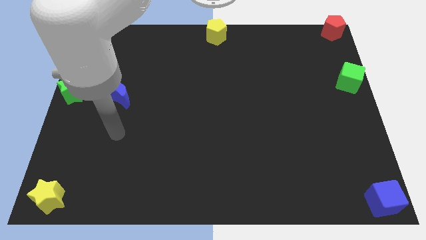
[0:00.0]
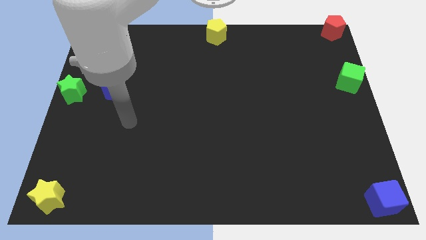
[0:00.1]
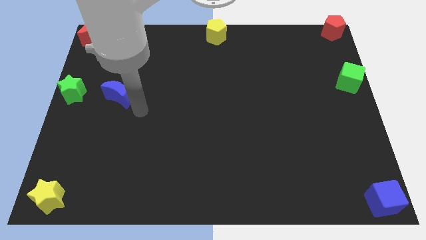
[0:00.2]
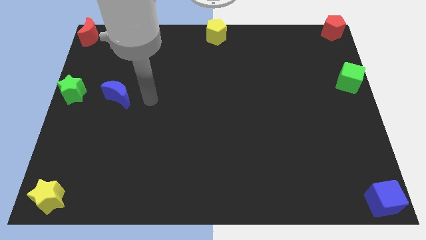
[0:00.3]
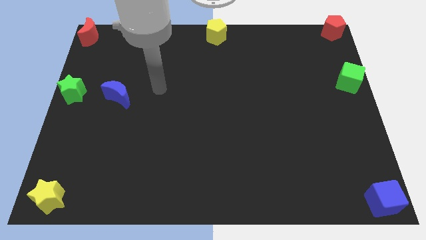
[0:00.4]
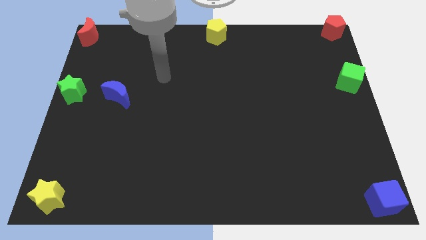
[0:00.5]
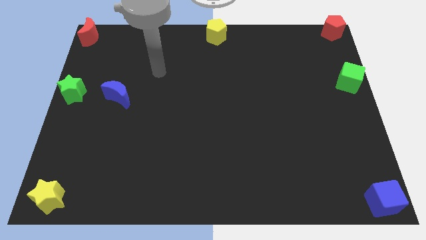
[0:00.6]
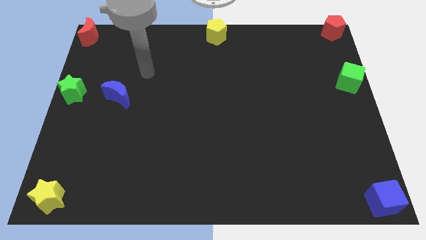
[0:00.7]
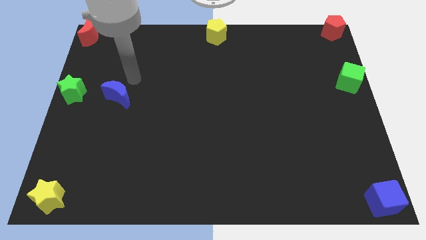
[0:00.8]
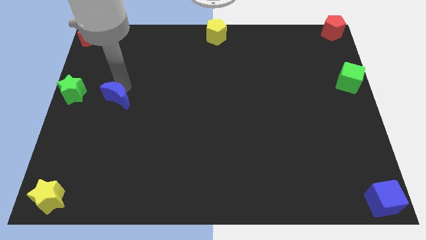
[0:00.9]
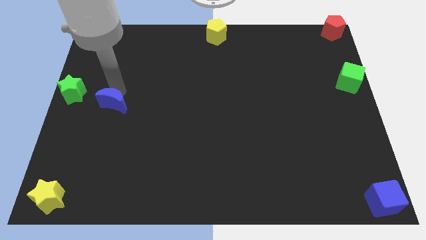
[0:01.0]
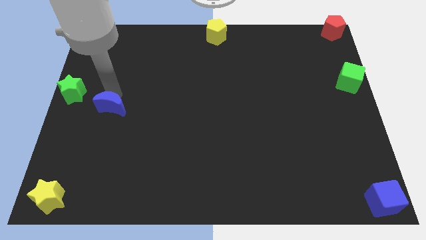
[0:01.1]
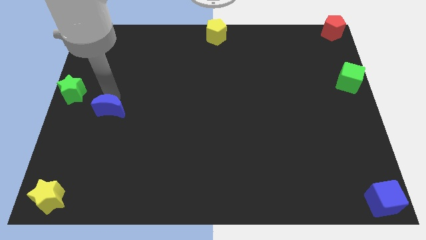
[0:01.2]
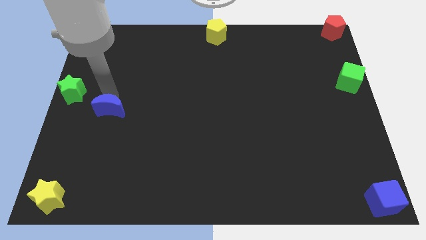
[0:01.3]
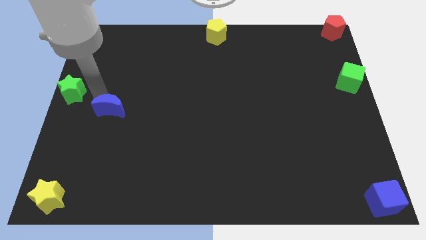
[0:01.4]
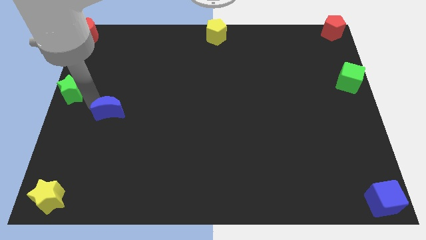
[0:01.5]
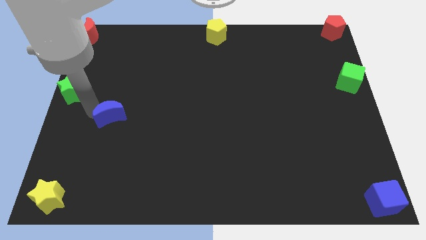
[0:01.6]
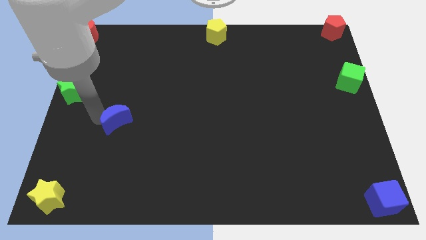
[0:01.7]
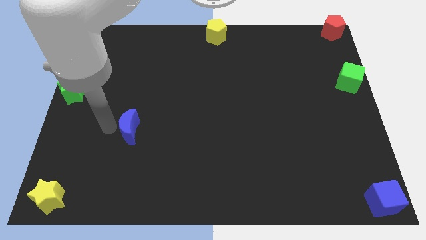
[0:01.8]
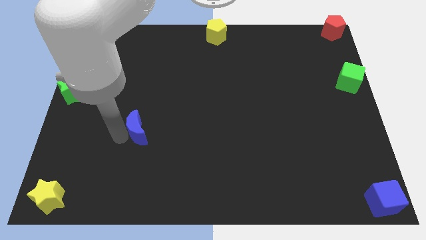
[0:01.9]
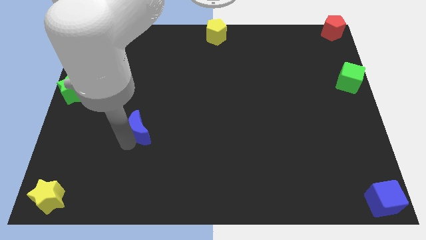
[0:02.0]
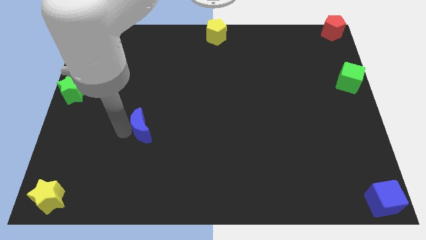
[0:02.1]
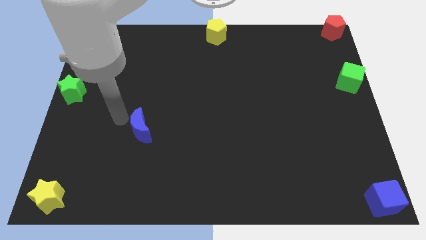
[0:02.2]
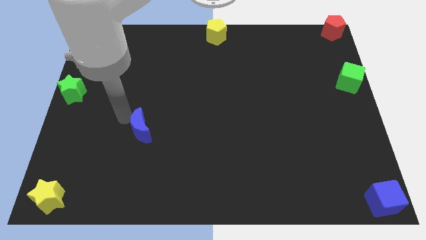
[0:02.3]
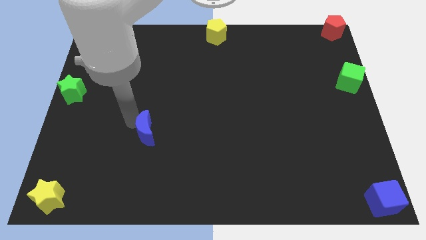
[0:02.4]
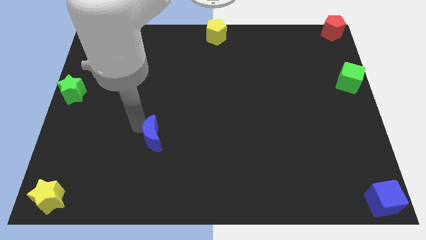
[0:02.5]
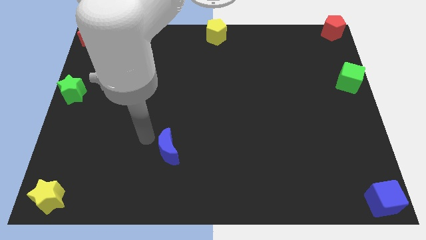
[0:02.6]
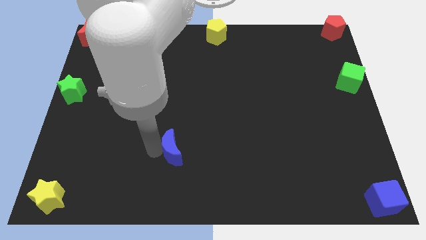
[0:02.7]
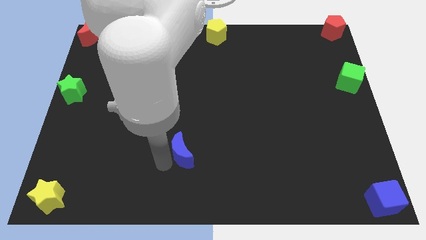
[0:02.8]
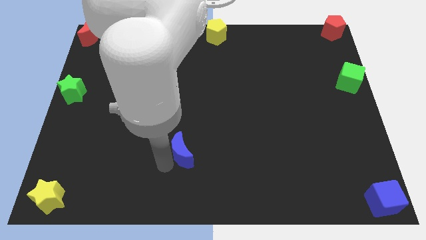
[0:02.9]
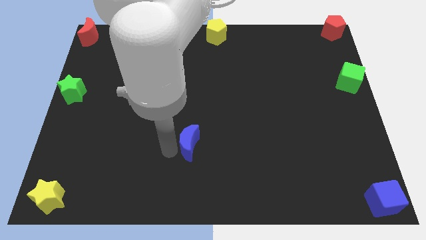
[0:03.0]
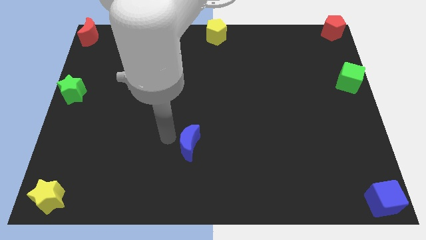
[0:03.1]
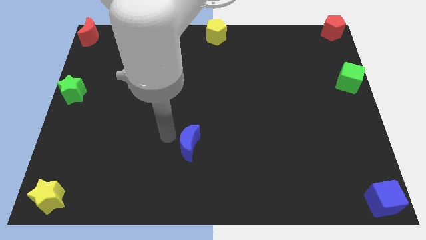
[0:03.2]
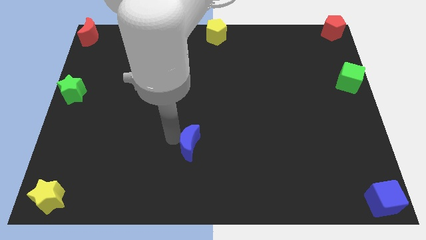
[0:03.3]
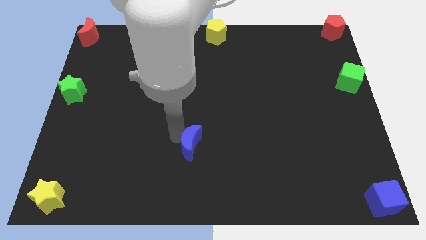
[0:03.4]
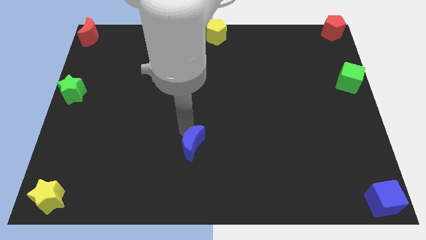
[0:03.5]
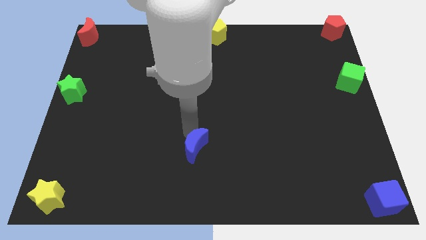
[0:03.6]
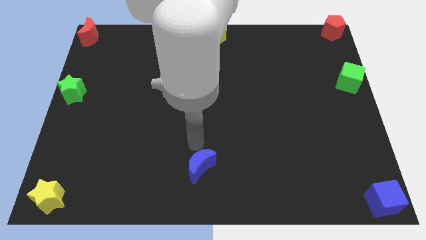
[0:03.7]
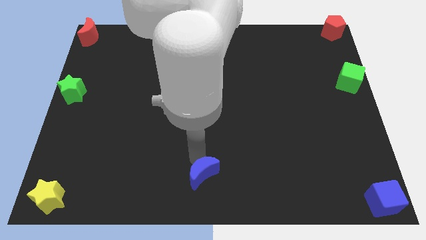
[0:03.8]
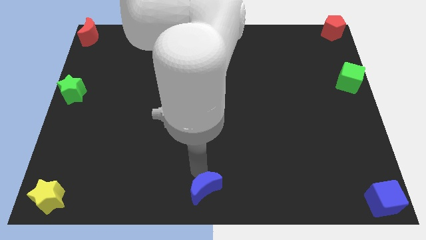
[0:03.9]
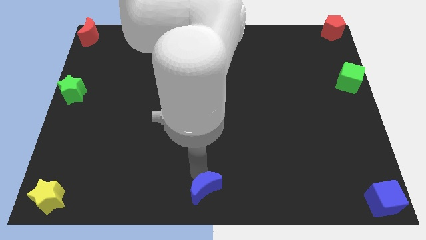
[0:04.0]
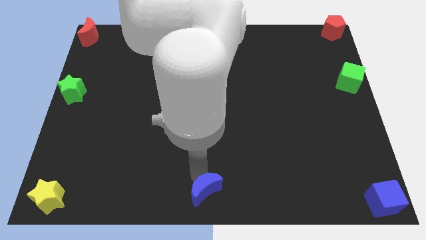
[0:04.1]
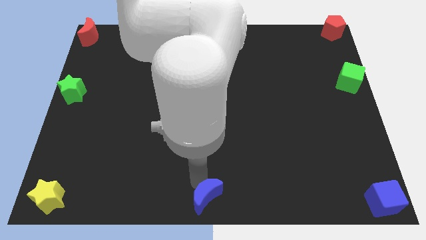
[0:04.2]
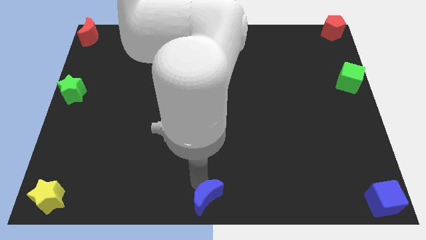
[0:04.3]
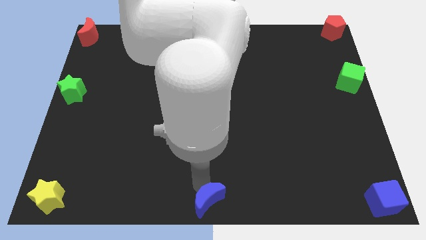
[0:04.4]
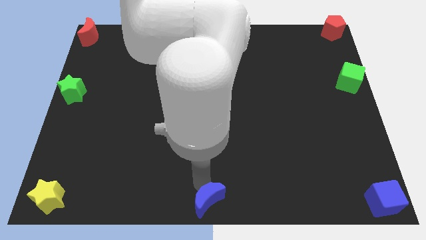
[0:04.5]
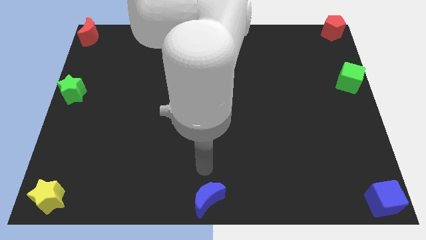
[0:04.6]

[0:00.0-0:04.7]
push the blue crescent towards the bottom center of the board

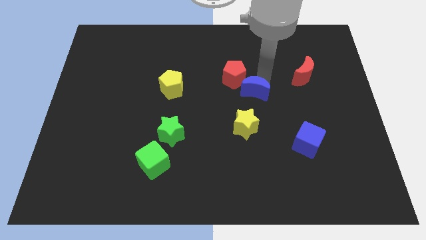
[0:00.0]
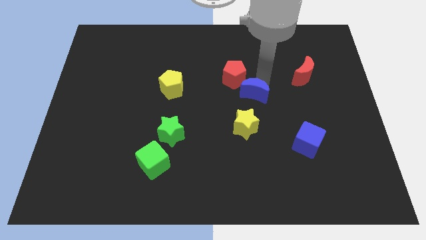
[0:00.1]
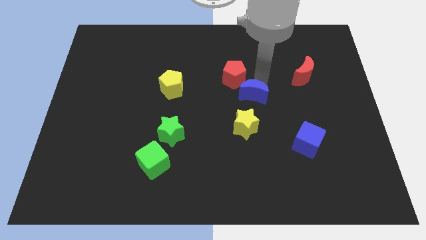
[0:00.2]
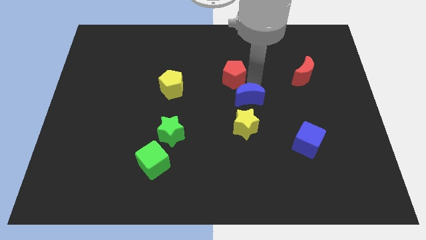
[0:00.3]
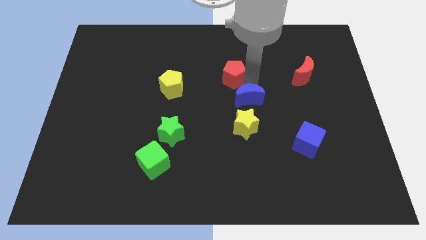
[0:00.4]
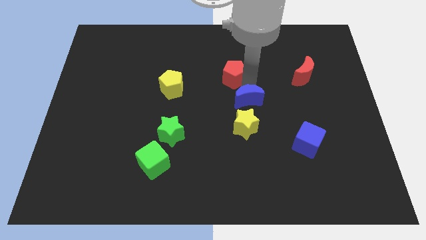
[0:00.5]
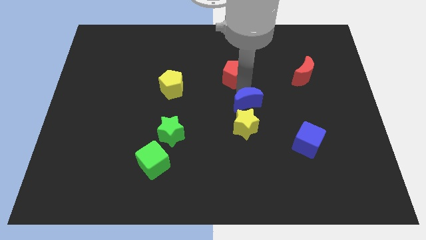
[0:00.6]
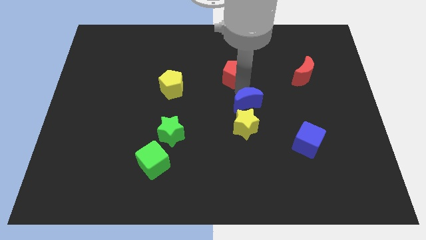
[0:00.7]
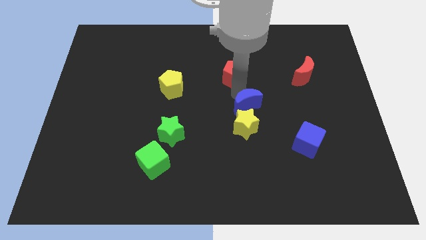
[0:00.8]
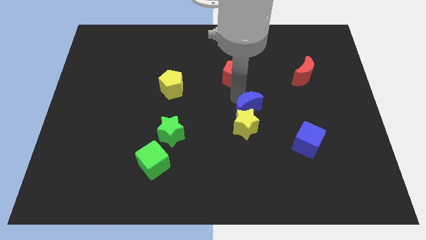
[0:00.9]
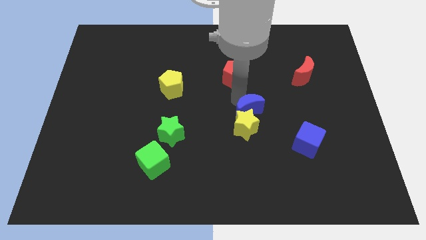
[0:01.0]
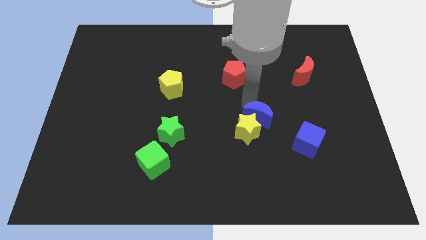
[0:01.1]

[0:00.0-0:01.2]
push the blue moon into the yellow star

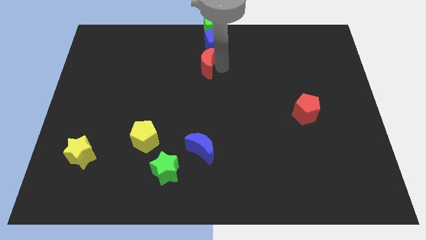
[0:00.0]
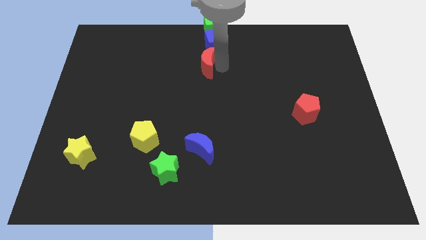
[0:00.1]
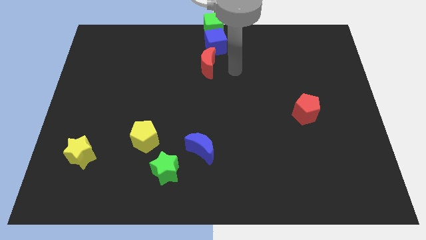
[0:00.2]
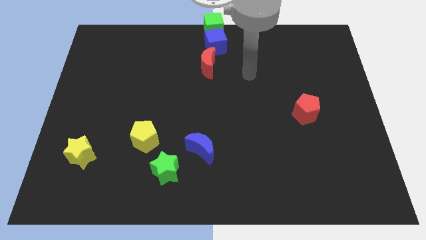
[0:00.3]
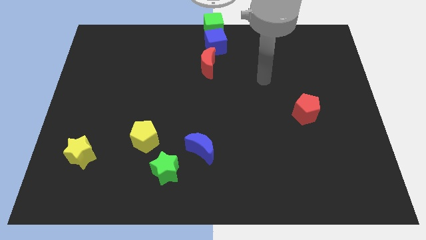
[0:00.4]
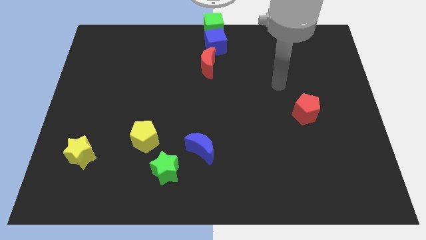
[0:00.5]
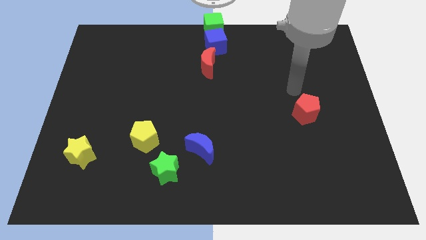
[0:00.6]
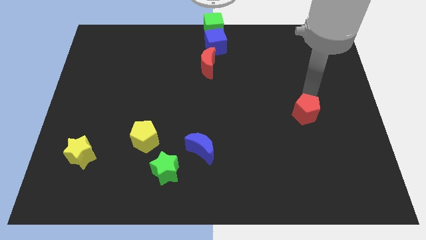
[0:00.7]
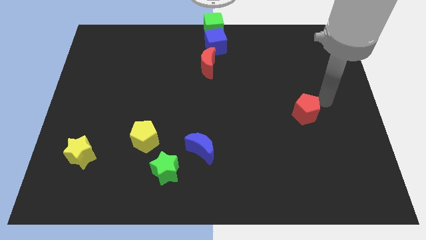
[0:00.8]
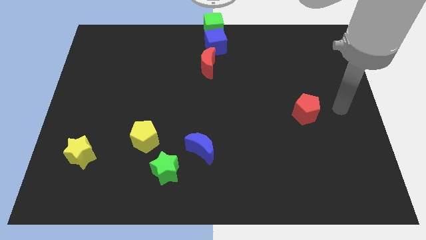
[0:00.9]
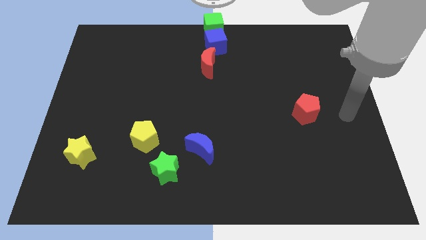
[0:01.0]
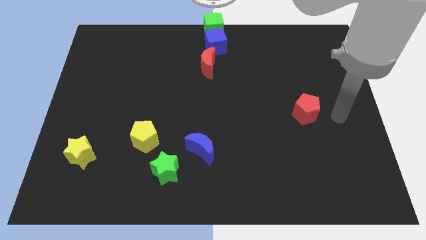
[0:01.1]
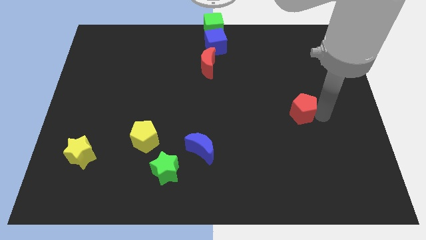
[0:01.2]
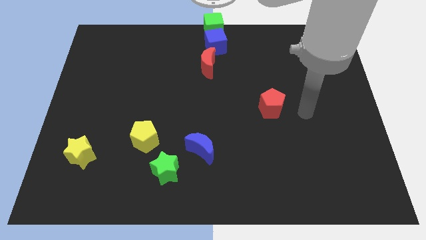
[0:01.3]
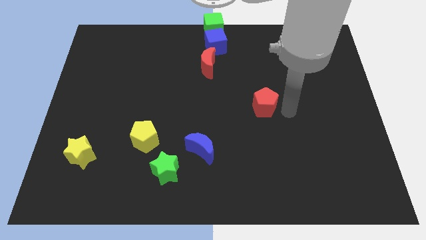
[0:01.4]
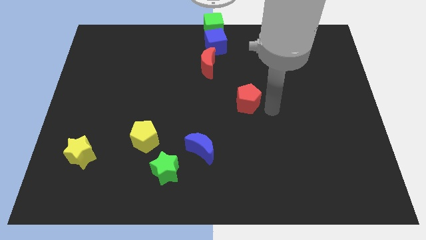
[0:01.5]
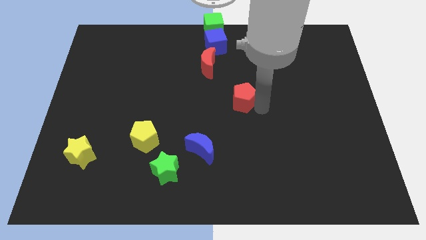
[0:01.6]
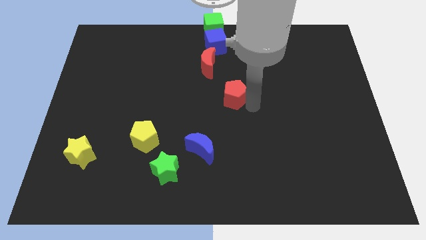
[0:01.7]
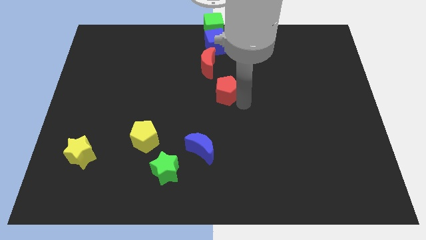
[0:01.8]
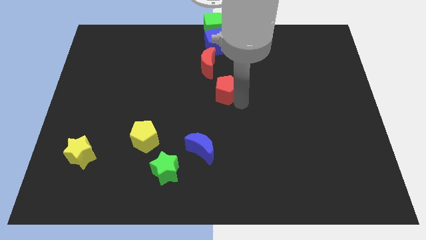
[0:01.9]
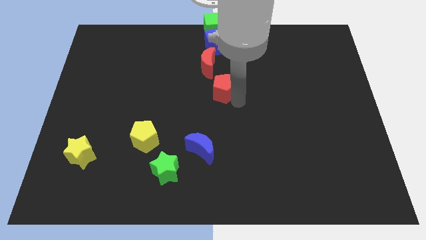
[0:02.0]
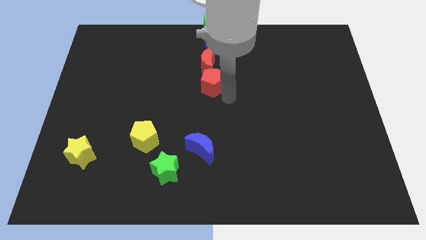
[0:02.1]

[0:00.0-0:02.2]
push the red pentagon towards the bottom of the red crescent

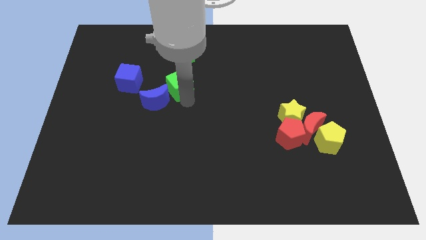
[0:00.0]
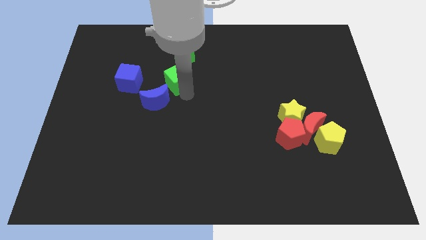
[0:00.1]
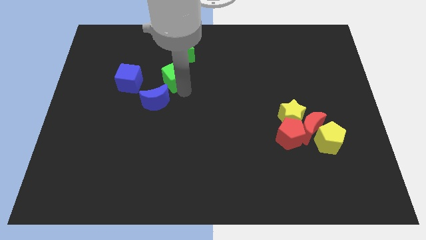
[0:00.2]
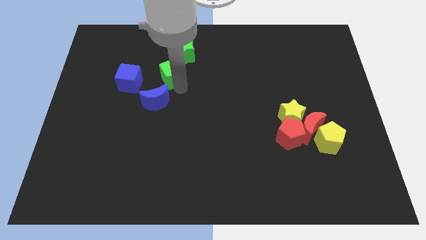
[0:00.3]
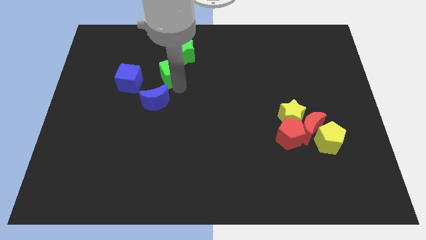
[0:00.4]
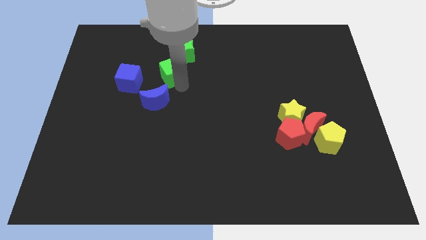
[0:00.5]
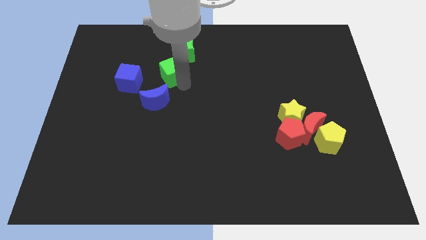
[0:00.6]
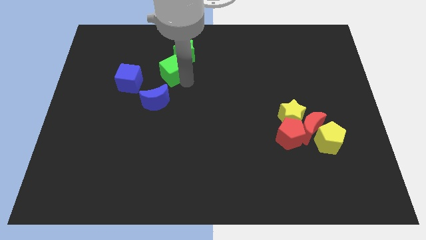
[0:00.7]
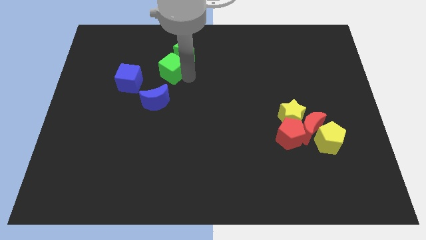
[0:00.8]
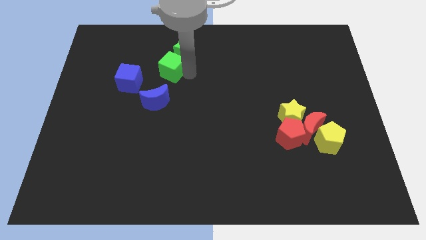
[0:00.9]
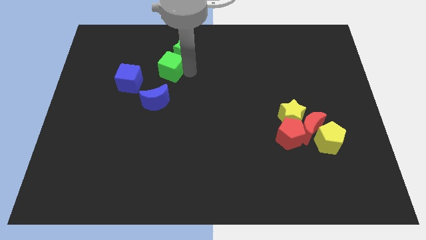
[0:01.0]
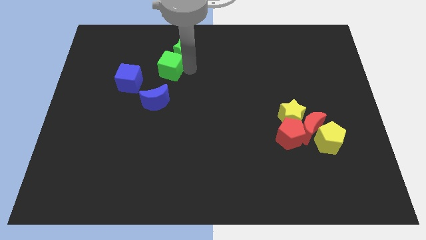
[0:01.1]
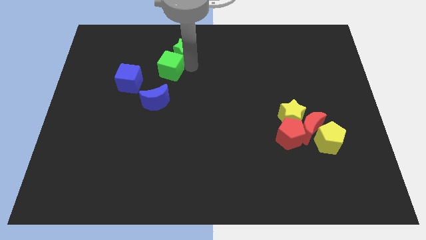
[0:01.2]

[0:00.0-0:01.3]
place the green cube to the right of the blue cube
